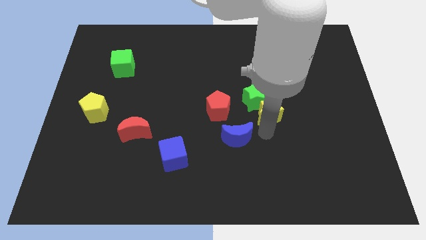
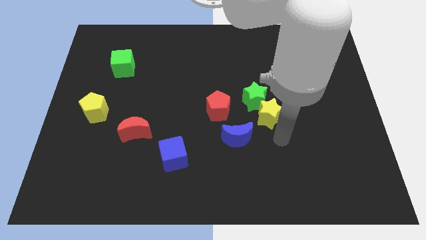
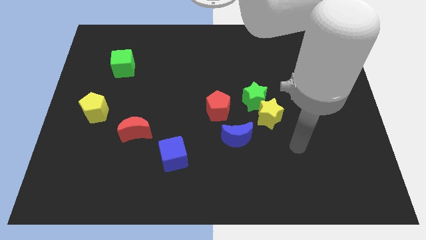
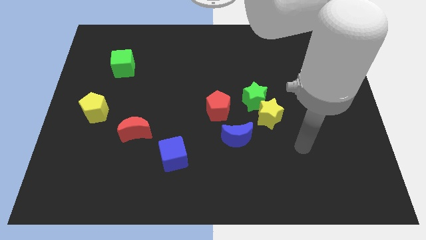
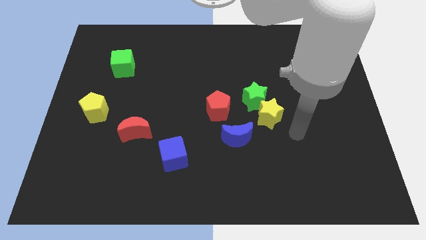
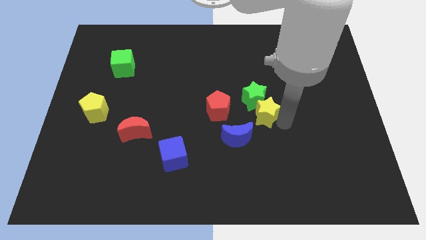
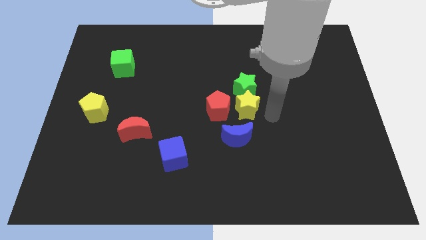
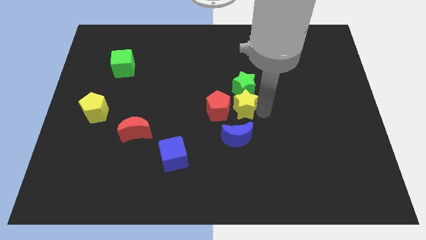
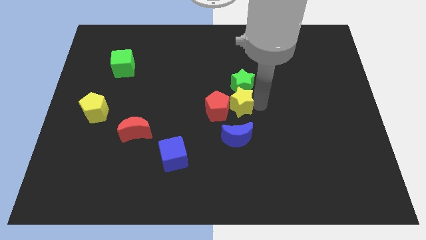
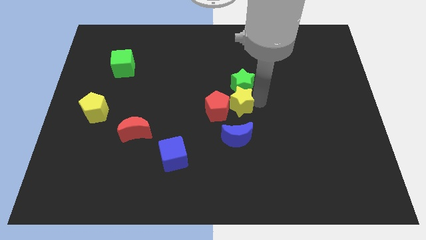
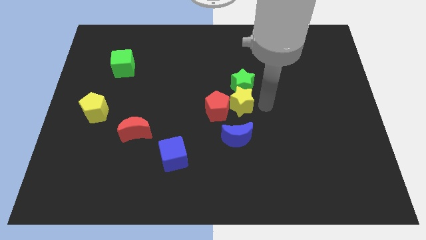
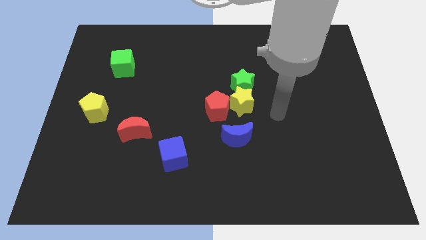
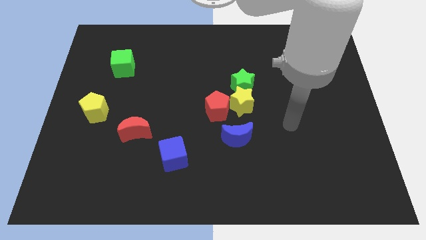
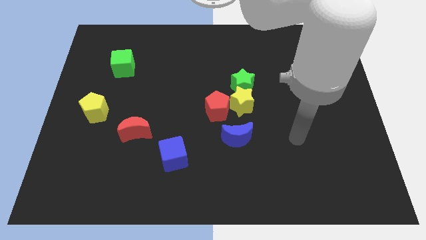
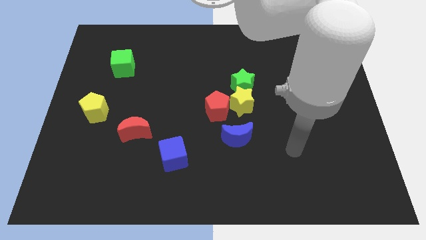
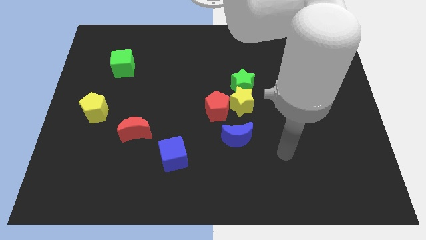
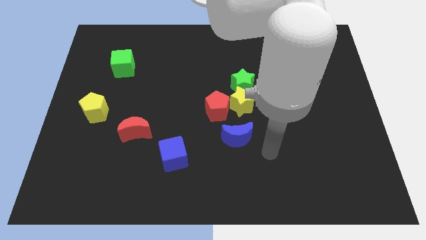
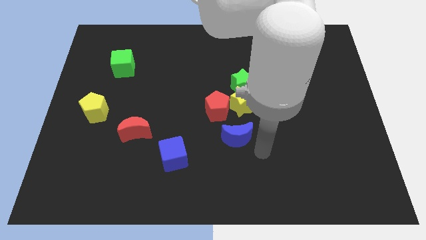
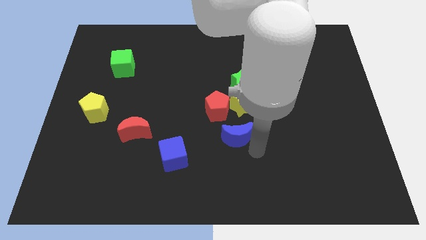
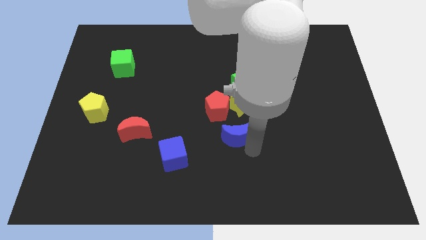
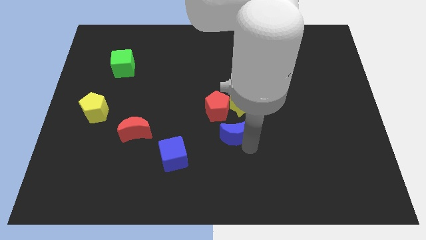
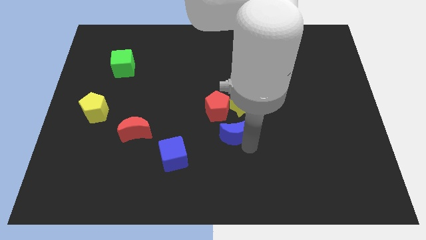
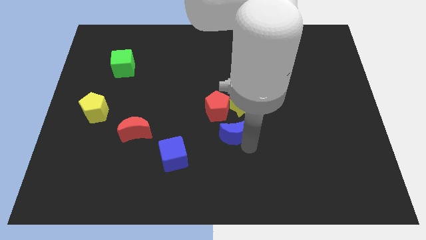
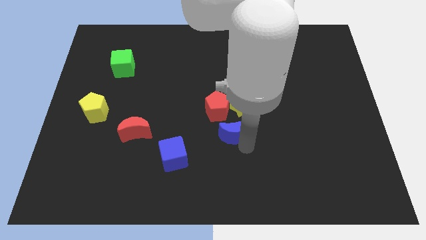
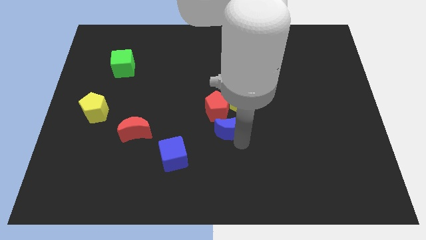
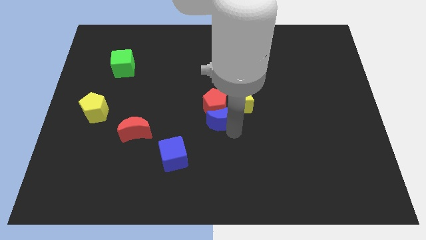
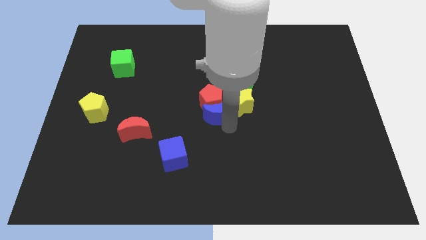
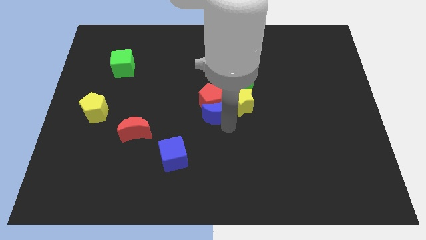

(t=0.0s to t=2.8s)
push the red pentagon with the blue moon

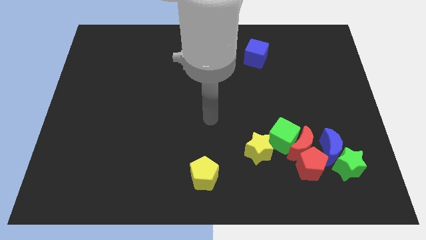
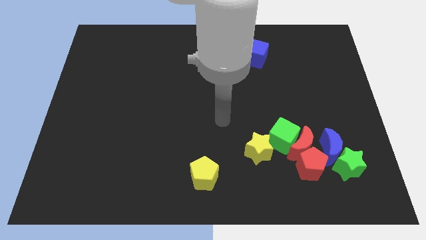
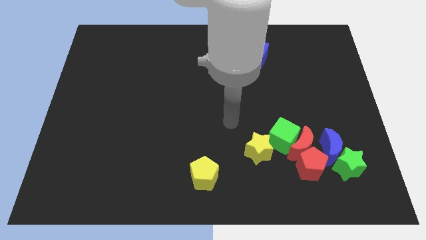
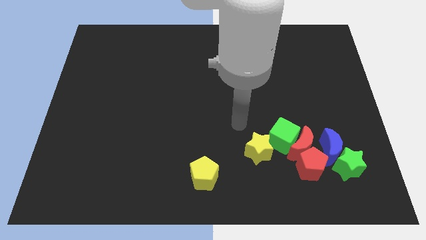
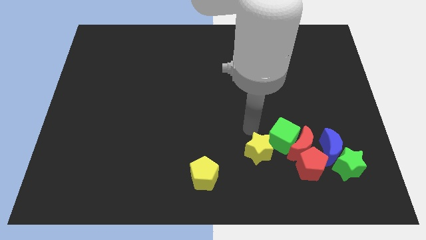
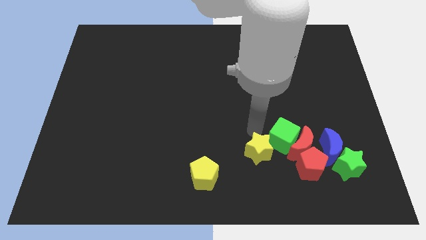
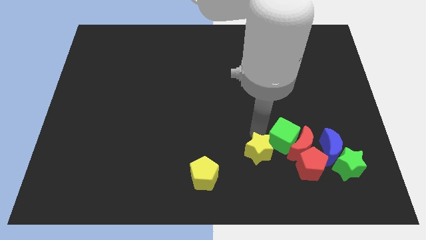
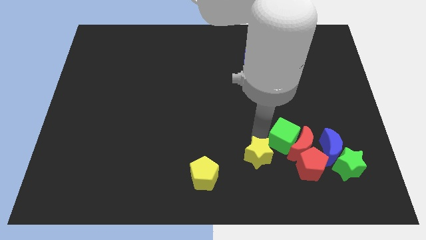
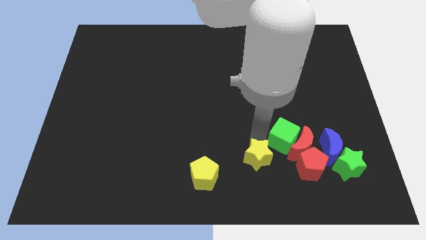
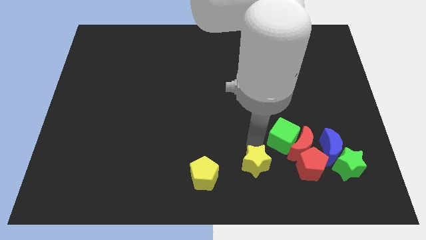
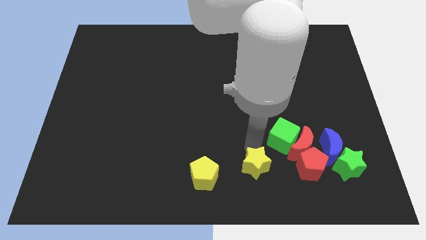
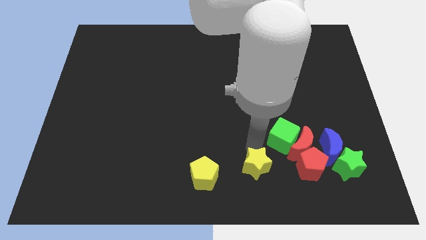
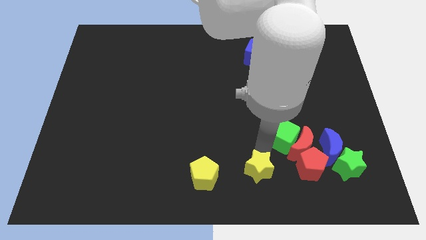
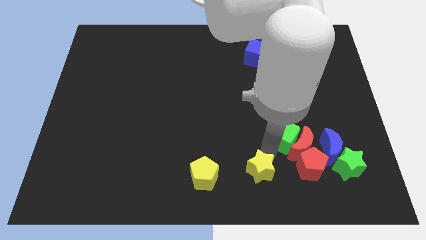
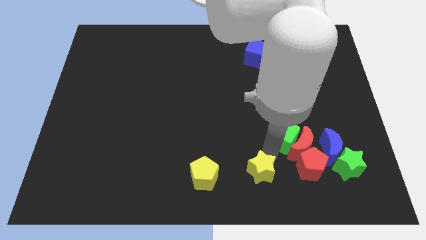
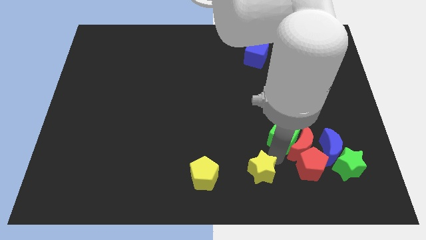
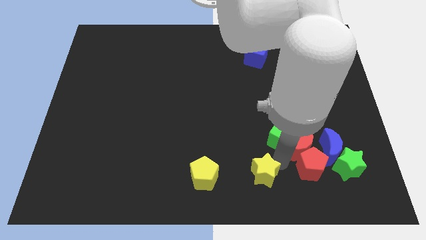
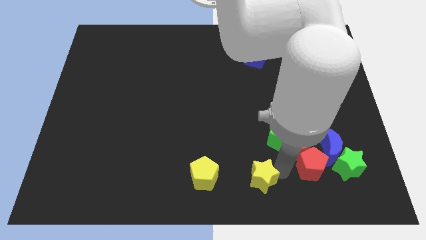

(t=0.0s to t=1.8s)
move the yellow star close to the yellow pentagon

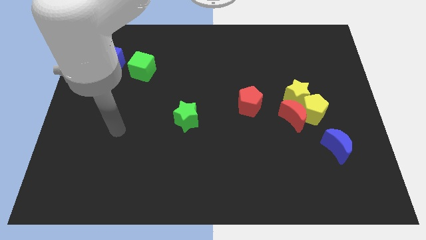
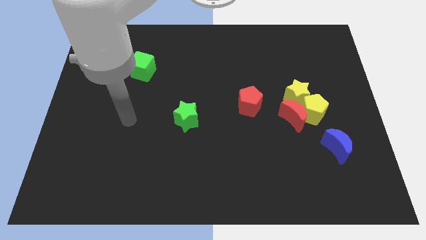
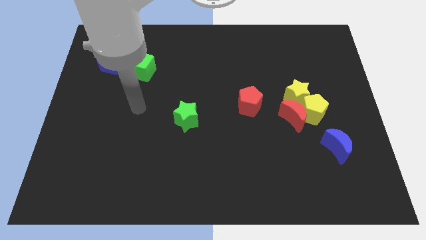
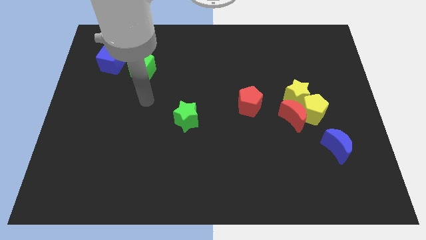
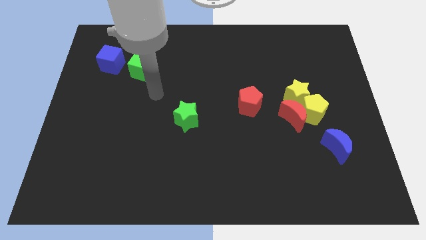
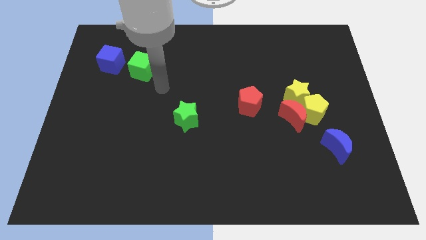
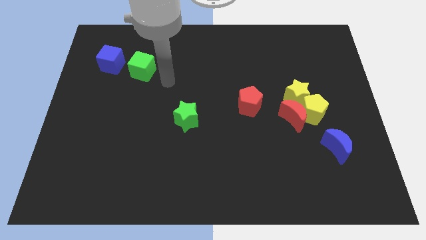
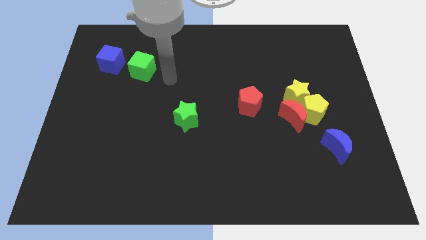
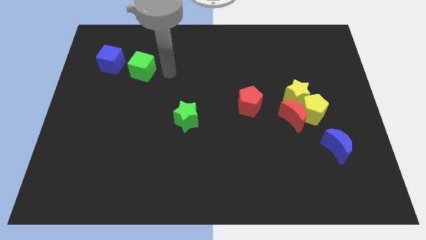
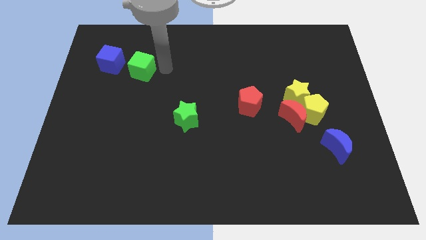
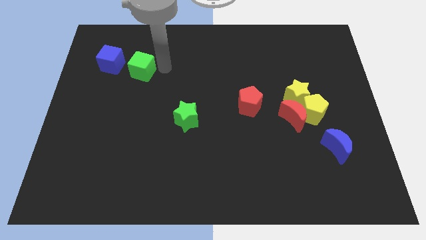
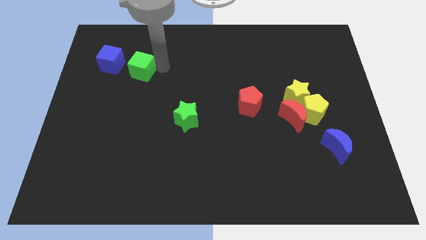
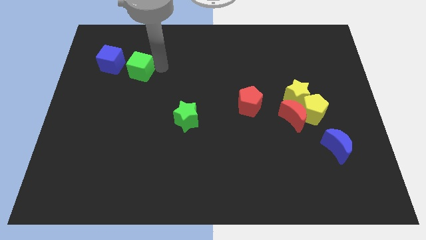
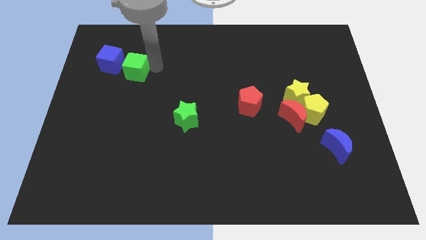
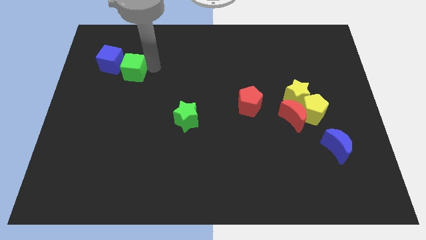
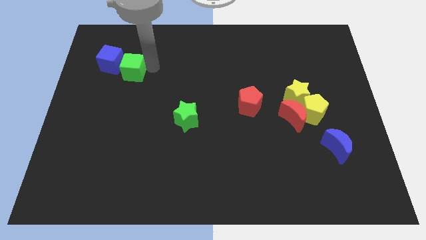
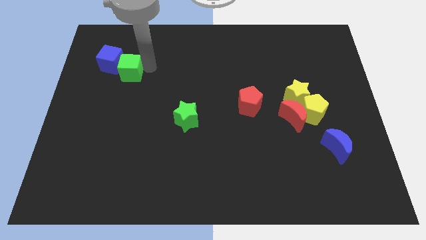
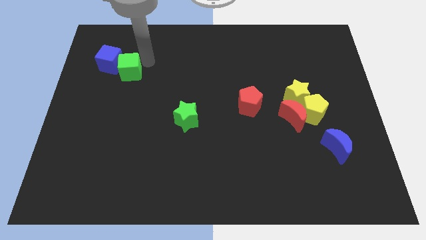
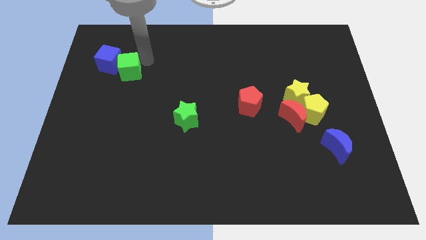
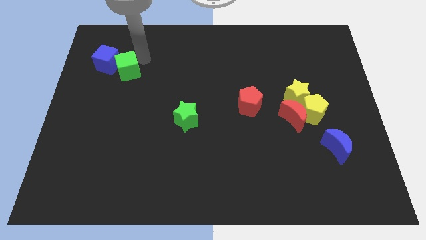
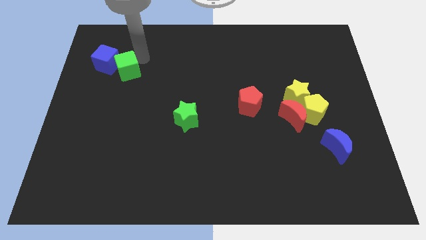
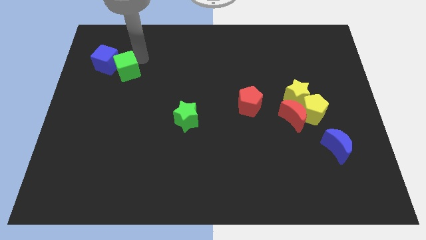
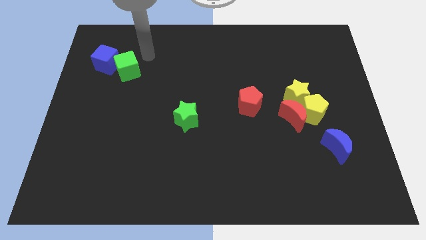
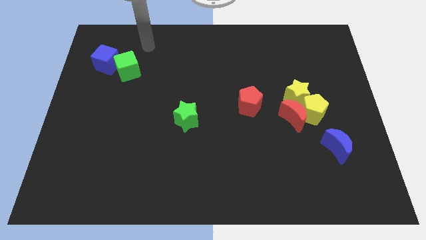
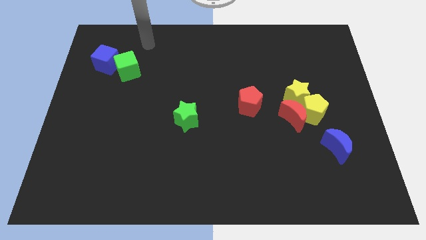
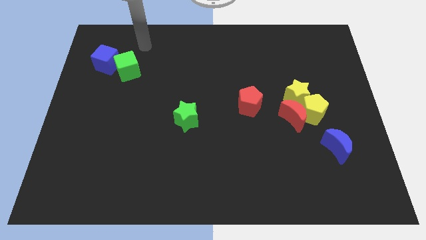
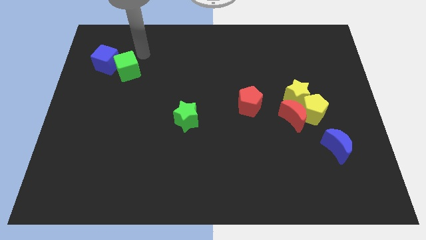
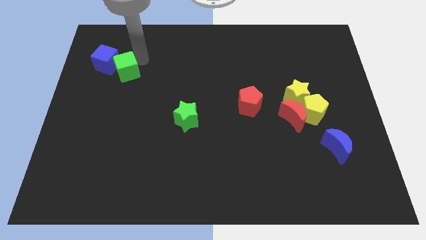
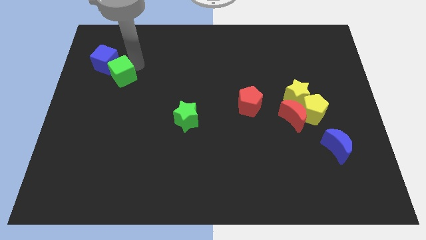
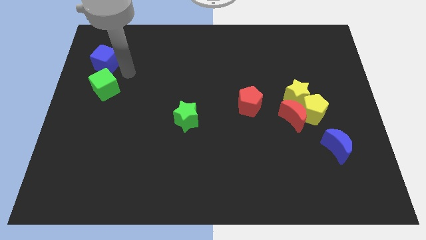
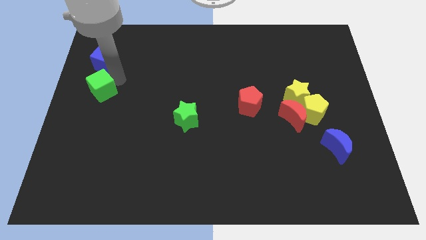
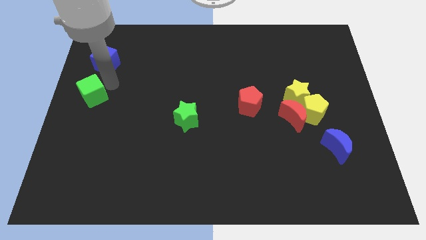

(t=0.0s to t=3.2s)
push the green cube below the blue cube

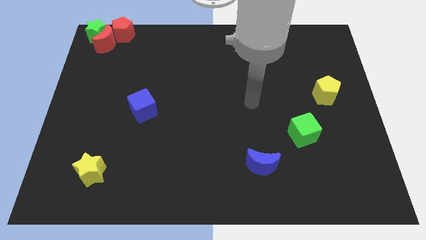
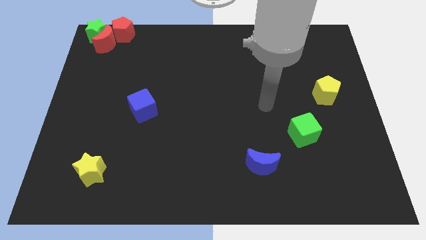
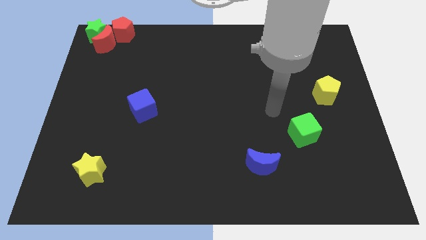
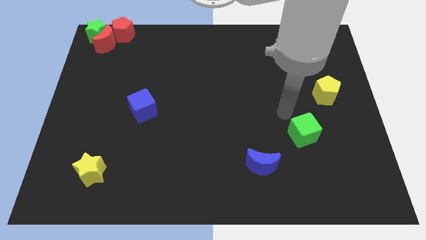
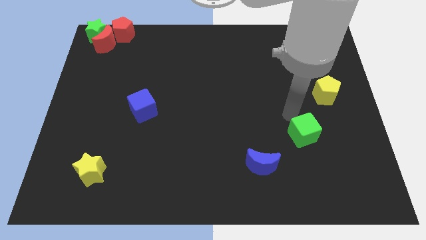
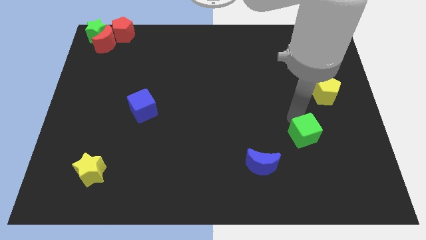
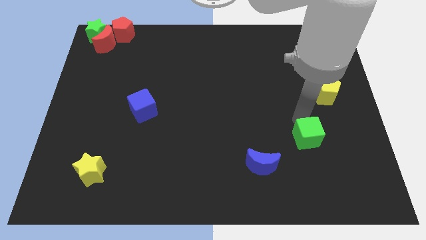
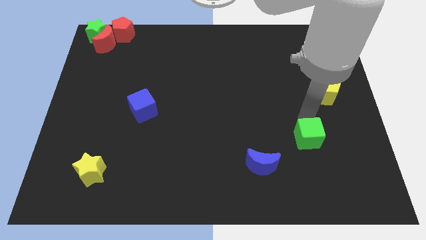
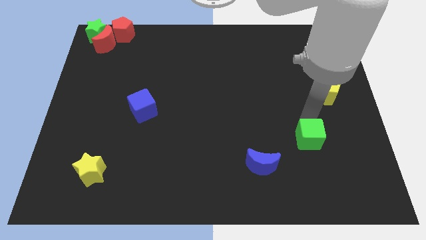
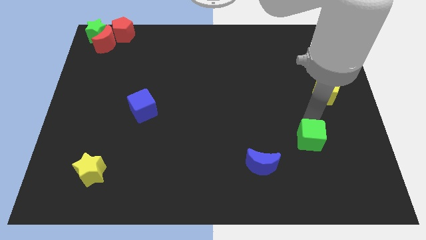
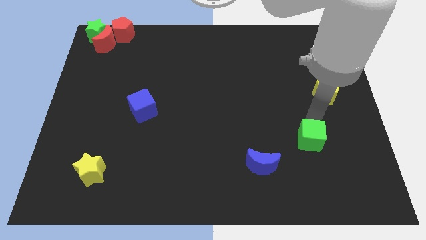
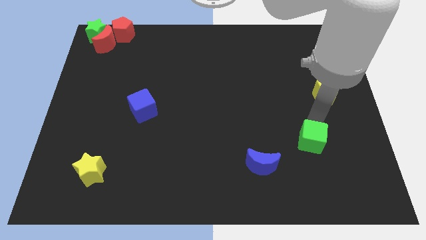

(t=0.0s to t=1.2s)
place arm on the top of green cube
